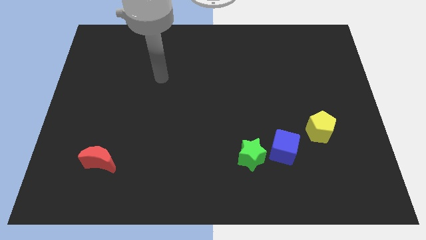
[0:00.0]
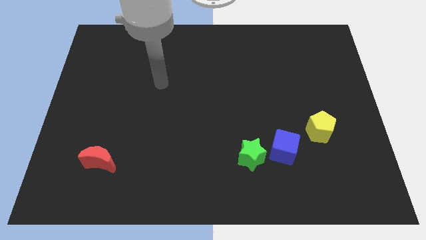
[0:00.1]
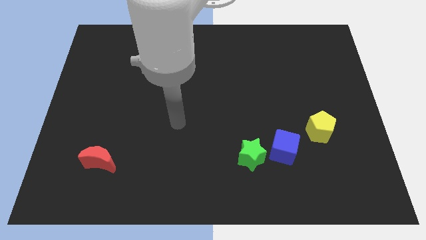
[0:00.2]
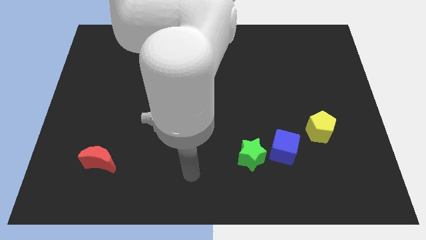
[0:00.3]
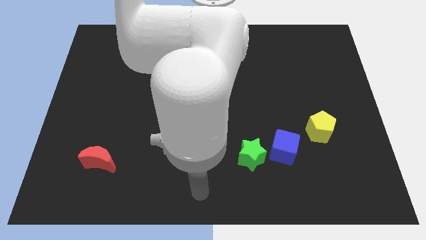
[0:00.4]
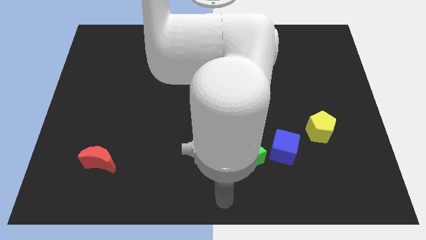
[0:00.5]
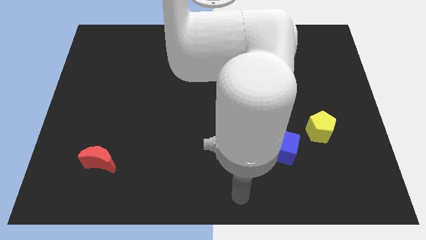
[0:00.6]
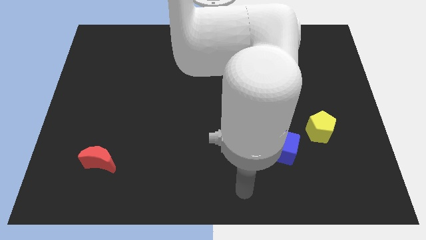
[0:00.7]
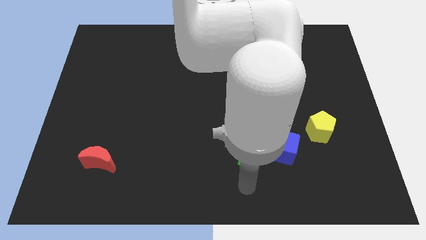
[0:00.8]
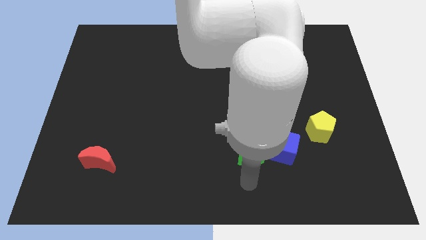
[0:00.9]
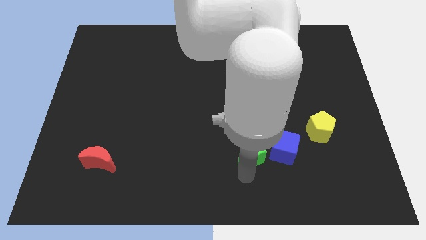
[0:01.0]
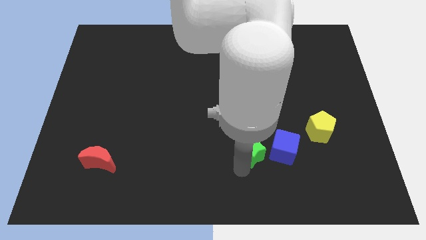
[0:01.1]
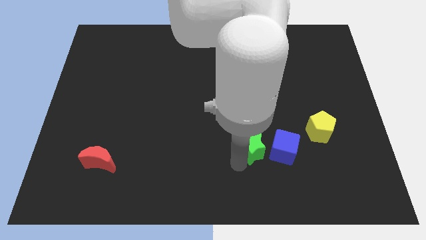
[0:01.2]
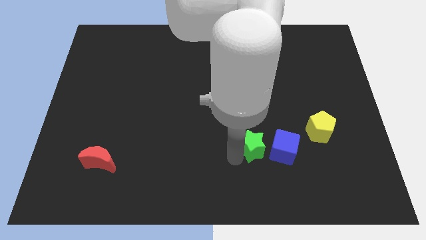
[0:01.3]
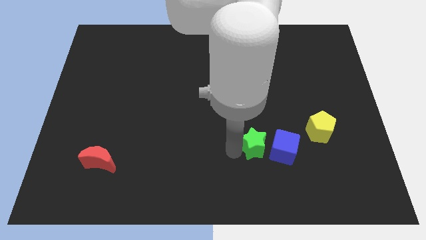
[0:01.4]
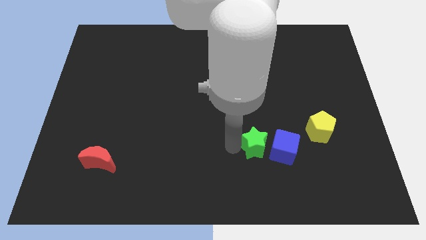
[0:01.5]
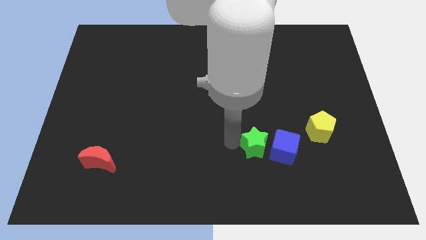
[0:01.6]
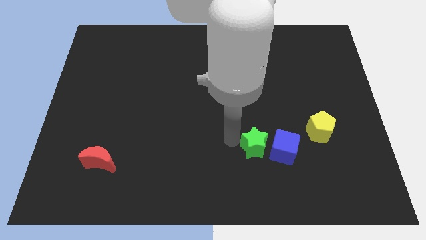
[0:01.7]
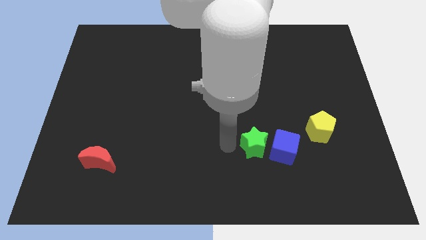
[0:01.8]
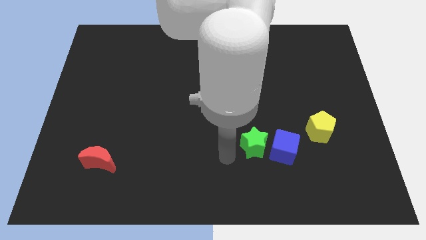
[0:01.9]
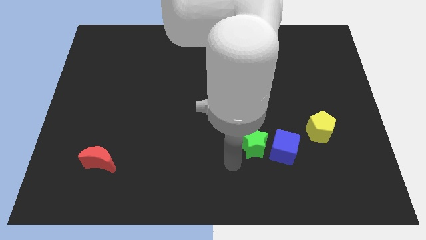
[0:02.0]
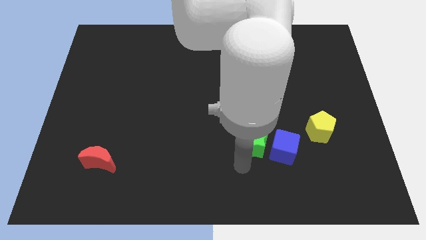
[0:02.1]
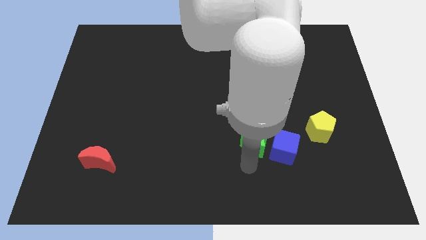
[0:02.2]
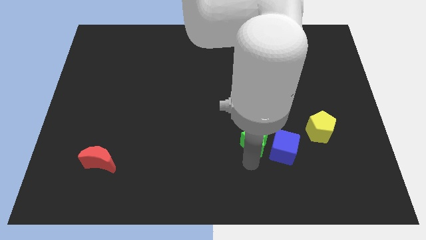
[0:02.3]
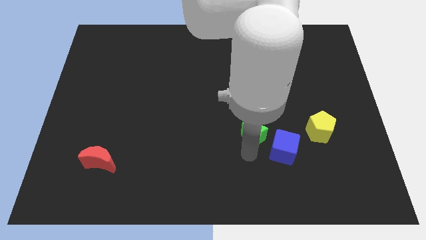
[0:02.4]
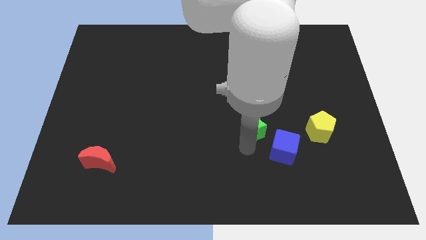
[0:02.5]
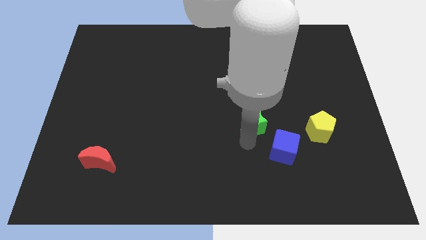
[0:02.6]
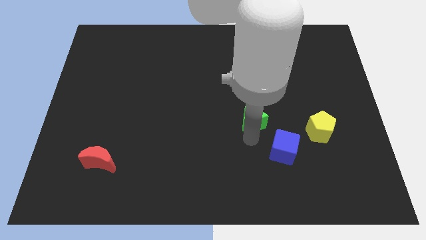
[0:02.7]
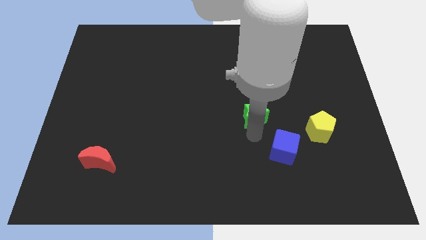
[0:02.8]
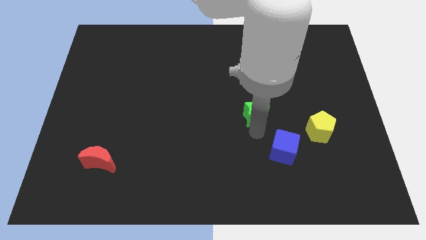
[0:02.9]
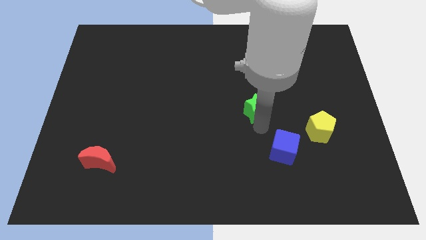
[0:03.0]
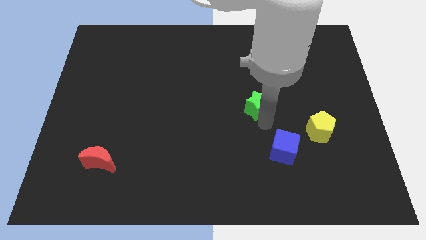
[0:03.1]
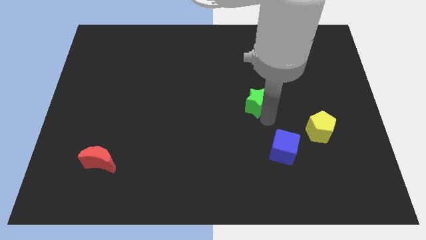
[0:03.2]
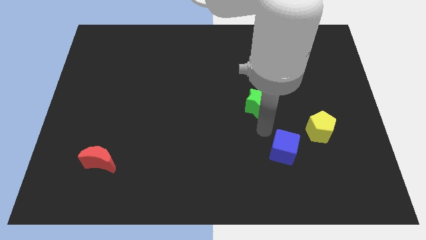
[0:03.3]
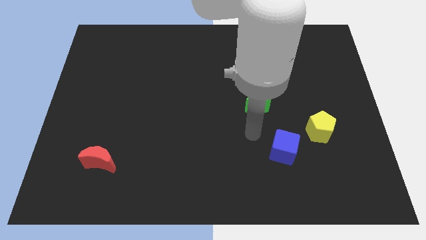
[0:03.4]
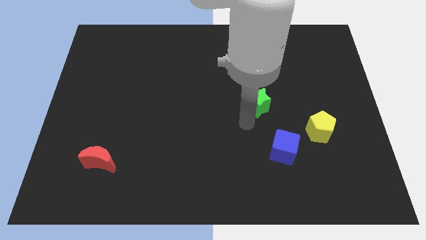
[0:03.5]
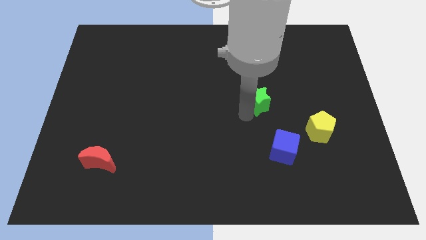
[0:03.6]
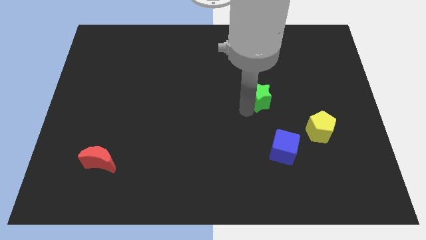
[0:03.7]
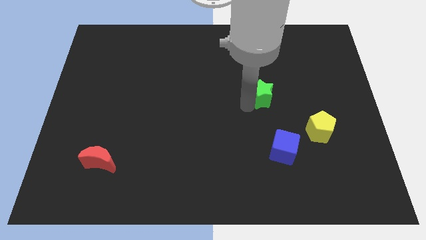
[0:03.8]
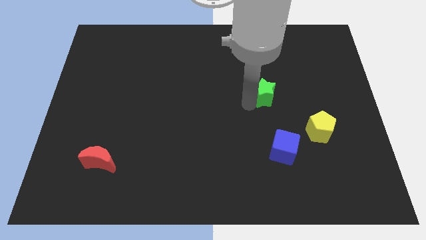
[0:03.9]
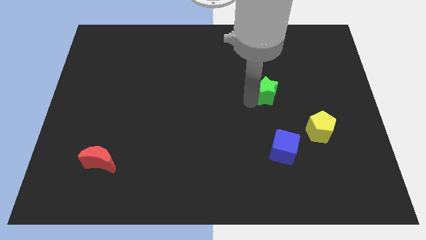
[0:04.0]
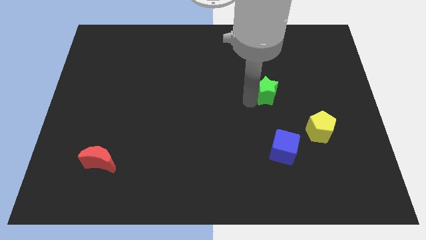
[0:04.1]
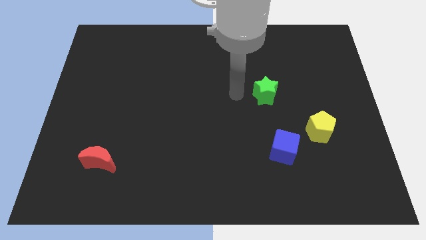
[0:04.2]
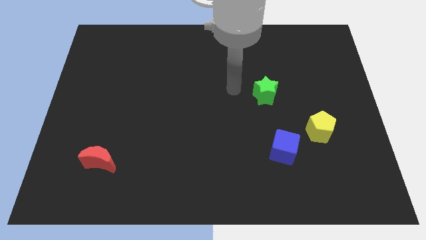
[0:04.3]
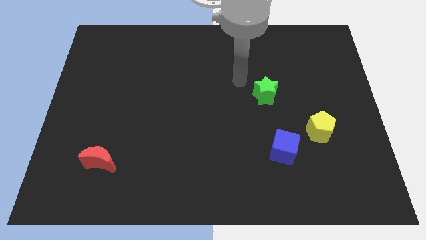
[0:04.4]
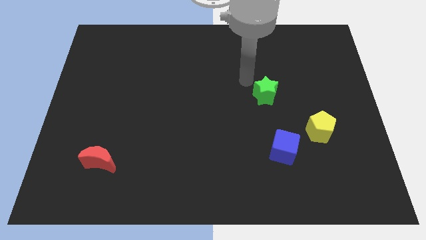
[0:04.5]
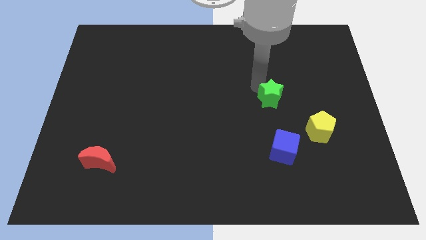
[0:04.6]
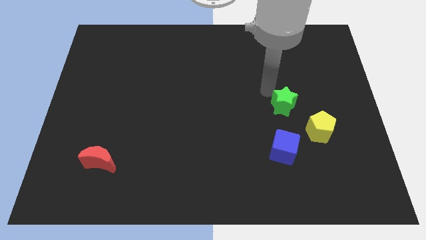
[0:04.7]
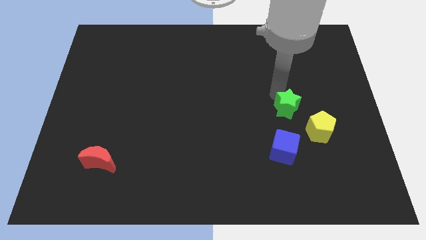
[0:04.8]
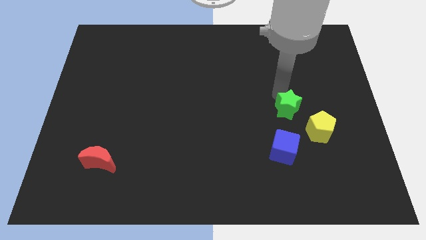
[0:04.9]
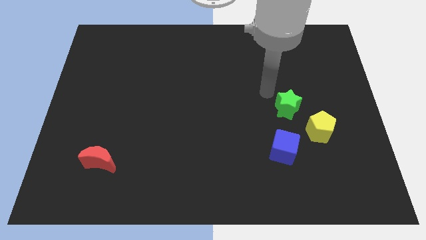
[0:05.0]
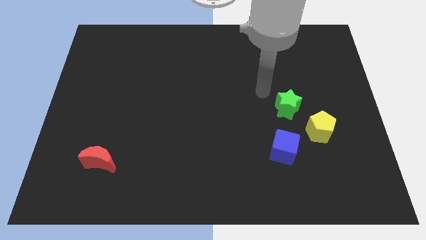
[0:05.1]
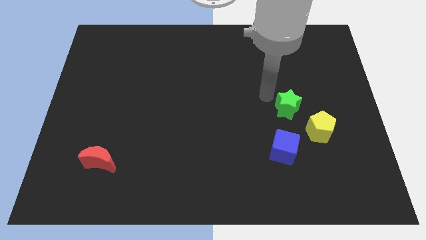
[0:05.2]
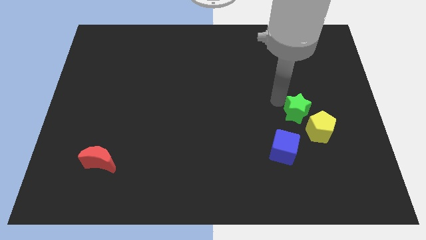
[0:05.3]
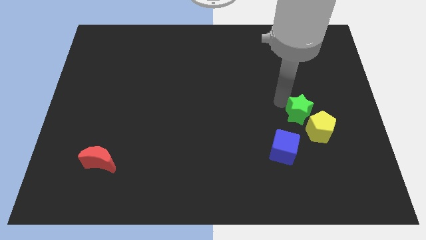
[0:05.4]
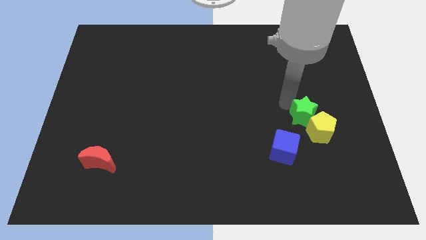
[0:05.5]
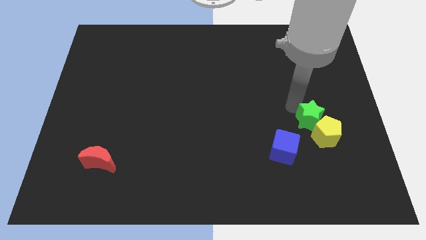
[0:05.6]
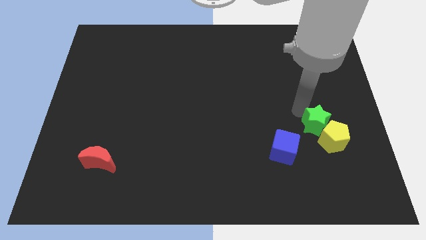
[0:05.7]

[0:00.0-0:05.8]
put the green star towards the yellow pentagon

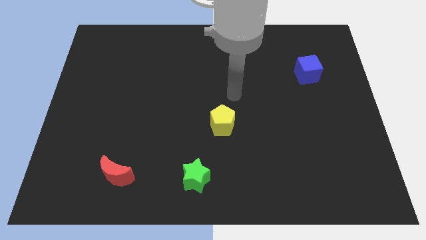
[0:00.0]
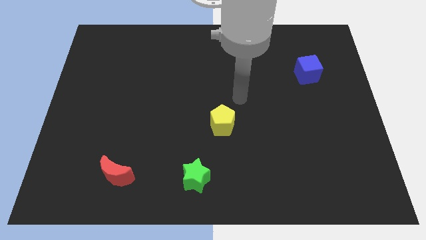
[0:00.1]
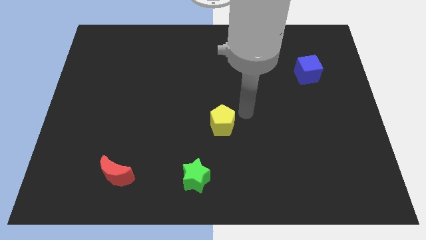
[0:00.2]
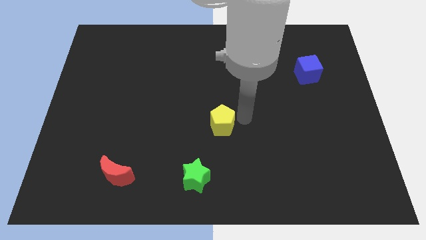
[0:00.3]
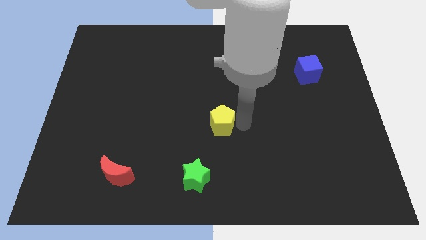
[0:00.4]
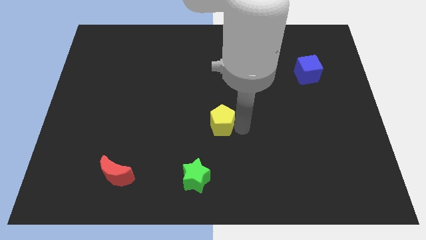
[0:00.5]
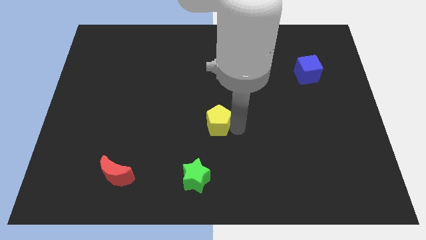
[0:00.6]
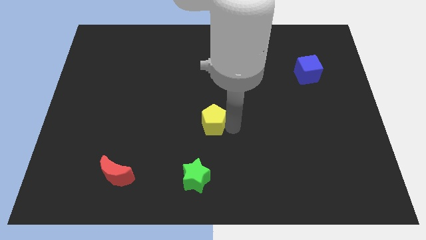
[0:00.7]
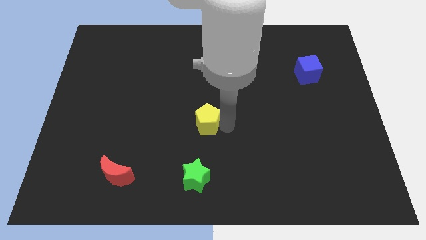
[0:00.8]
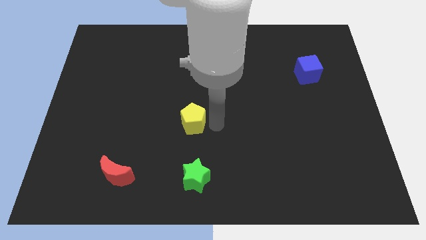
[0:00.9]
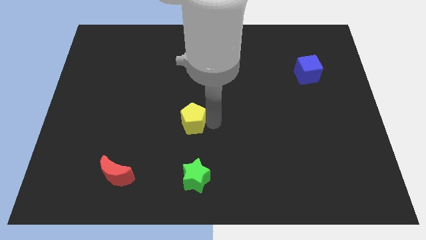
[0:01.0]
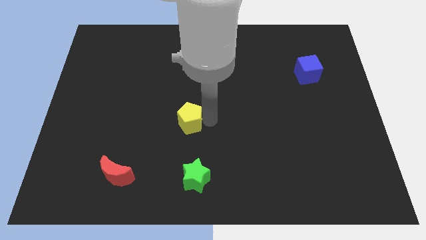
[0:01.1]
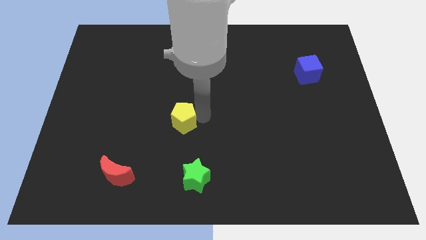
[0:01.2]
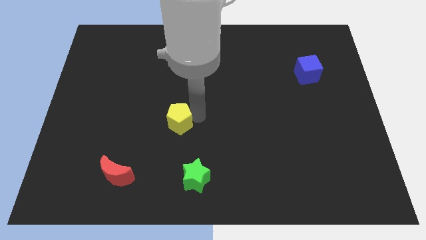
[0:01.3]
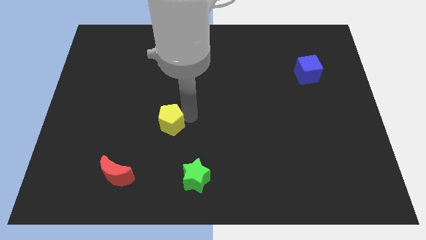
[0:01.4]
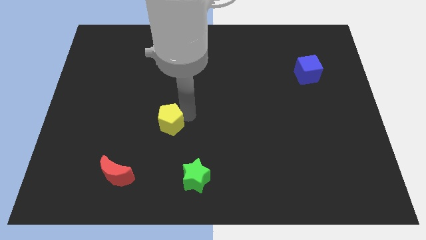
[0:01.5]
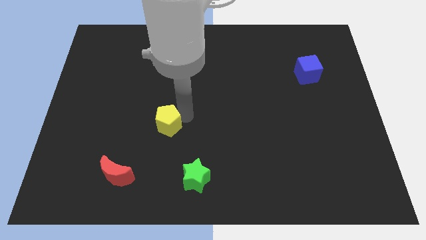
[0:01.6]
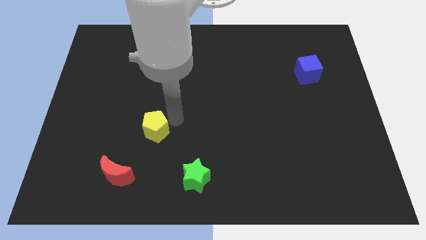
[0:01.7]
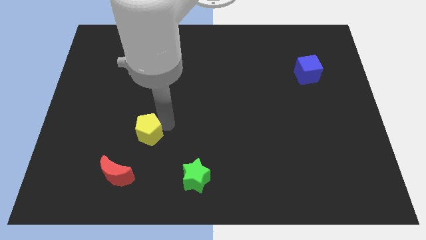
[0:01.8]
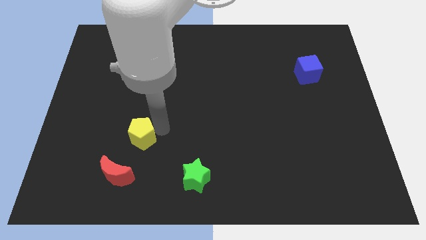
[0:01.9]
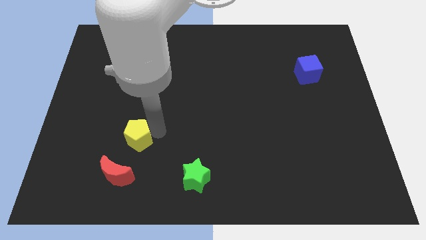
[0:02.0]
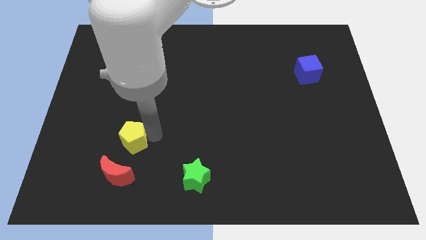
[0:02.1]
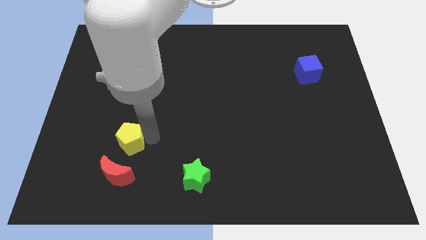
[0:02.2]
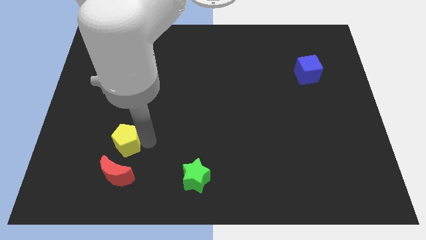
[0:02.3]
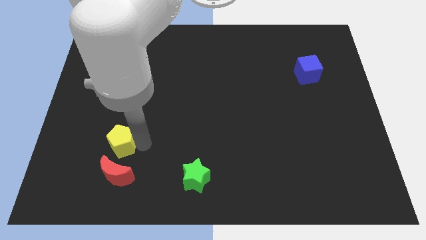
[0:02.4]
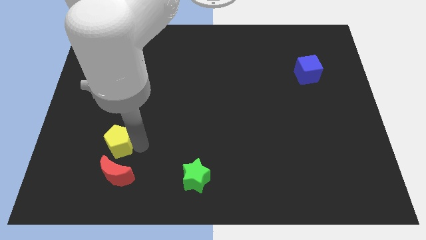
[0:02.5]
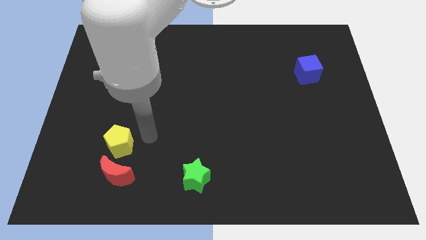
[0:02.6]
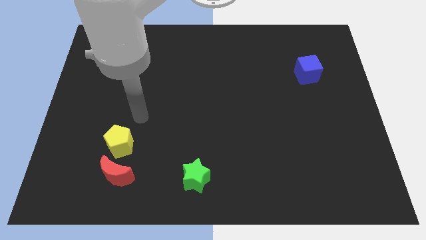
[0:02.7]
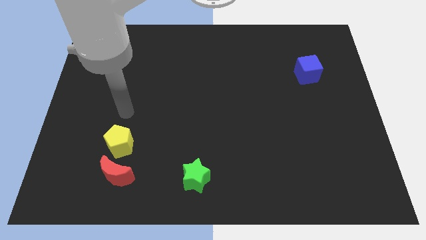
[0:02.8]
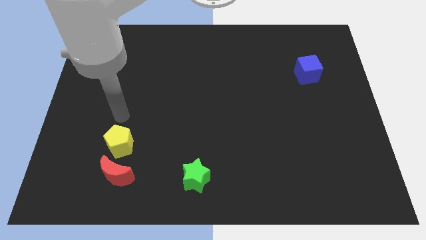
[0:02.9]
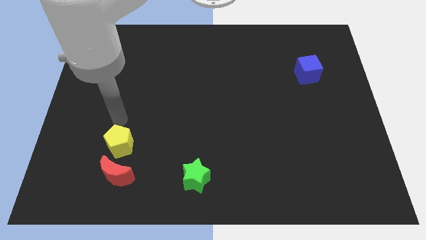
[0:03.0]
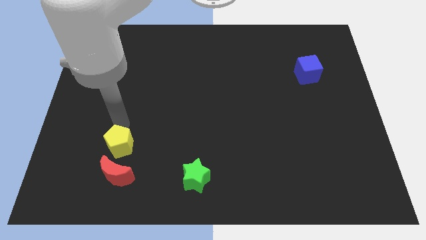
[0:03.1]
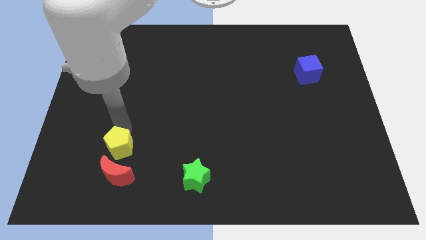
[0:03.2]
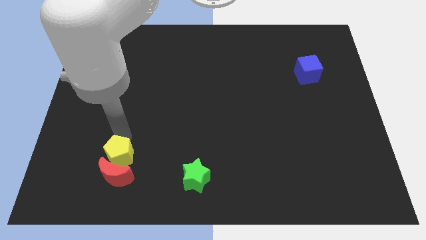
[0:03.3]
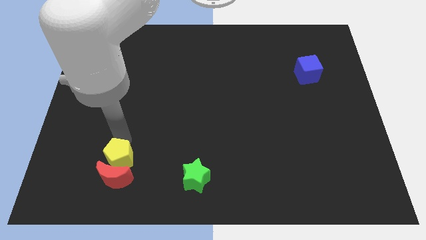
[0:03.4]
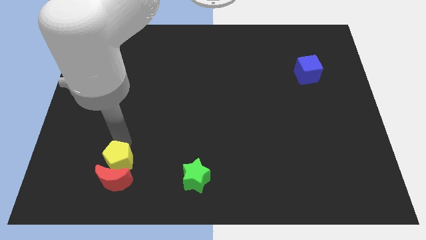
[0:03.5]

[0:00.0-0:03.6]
slide the yellow pentagon next to the red moon
